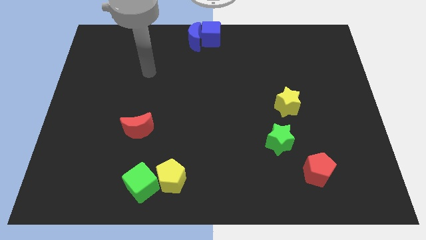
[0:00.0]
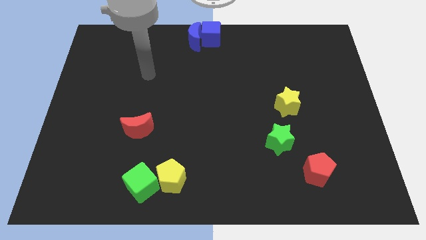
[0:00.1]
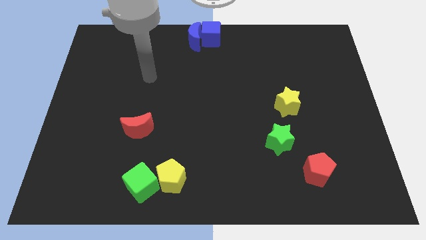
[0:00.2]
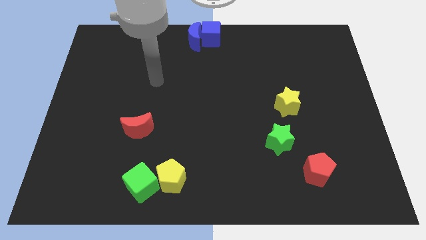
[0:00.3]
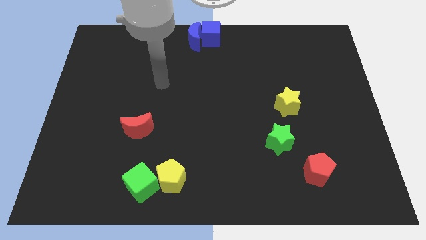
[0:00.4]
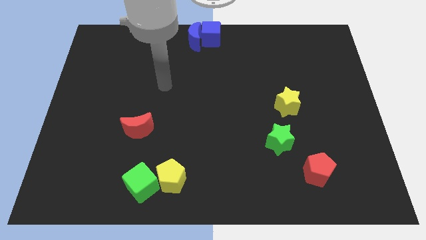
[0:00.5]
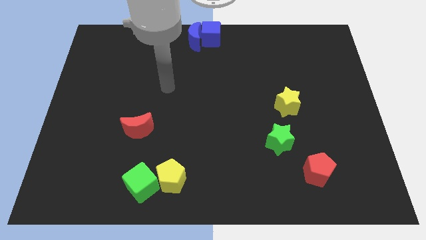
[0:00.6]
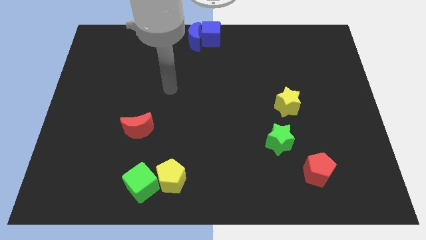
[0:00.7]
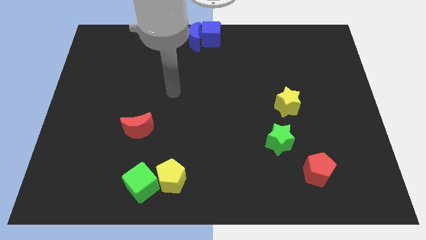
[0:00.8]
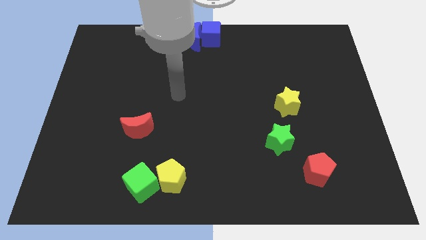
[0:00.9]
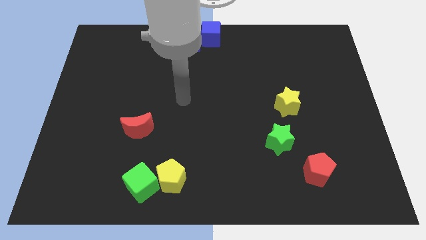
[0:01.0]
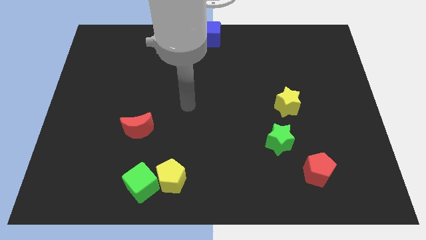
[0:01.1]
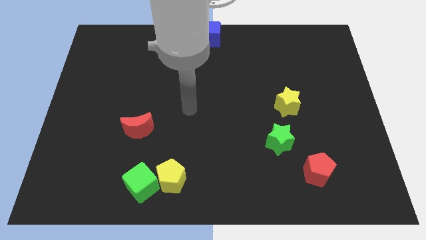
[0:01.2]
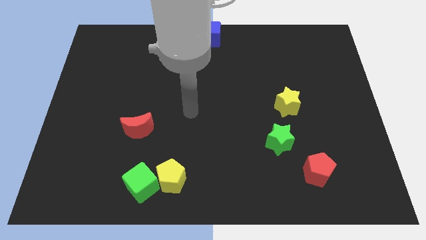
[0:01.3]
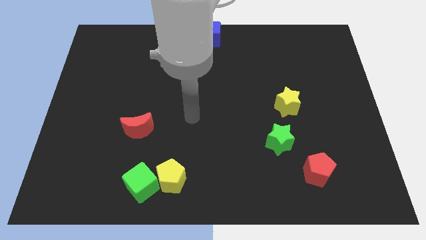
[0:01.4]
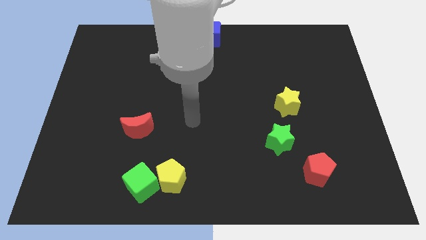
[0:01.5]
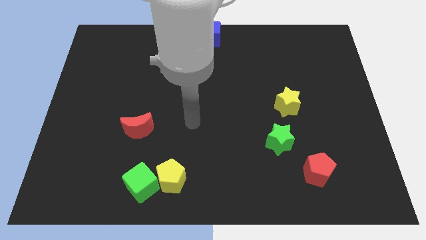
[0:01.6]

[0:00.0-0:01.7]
point your arm at the center of the board

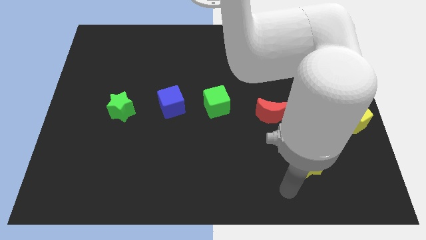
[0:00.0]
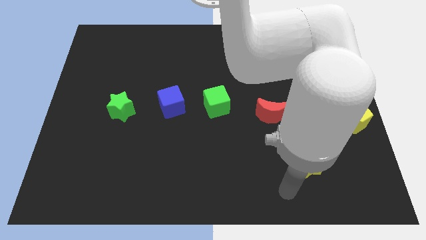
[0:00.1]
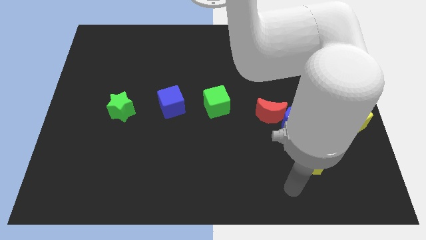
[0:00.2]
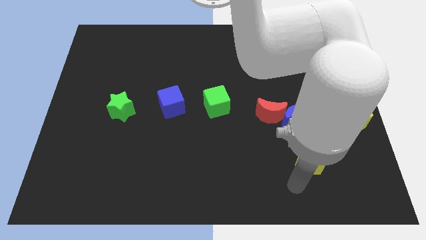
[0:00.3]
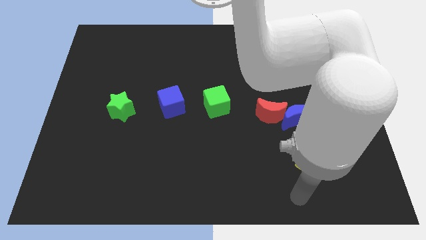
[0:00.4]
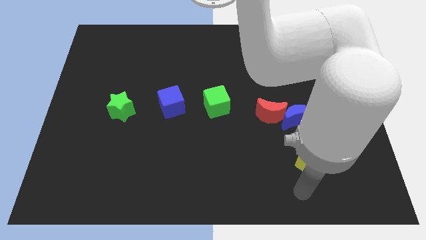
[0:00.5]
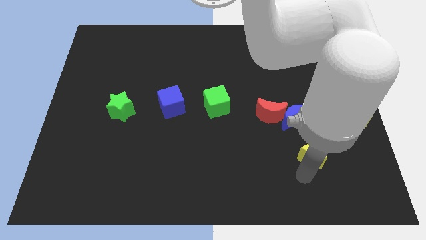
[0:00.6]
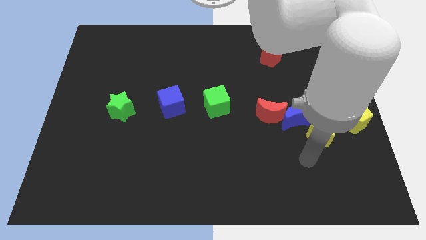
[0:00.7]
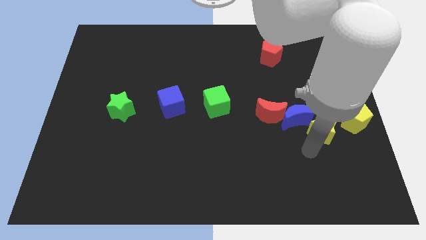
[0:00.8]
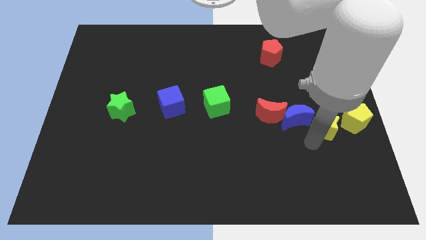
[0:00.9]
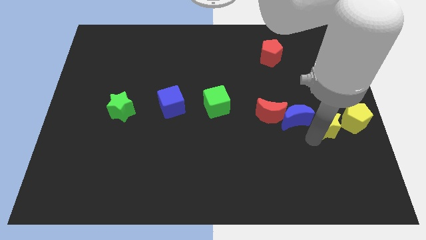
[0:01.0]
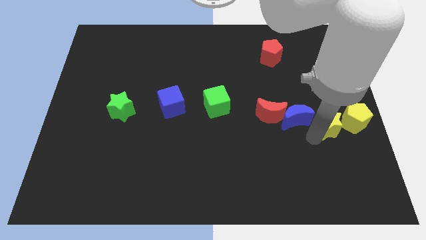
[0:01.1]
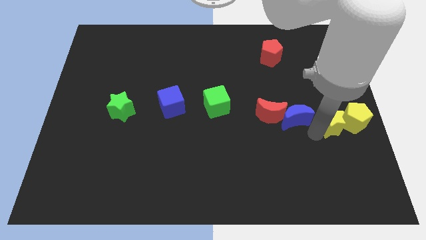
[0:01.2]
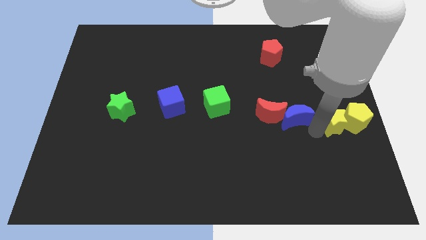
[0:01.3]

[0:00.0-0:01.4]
push the yellow star into the yellow pentagon

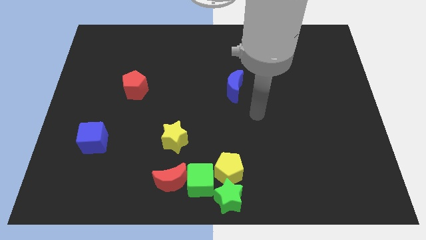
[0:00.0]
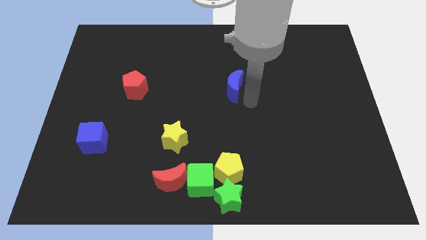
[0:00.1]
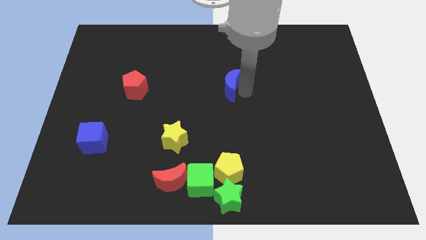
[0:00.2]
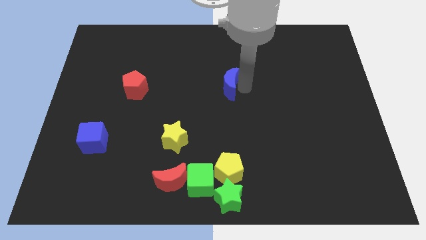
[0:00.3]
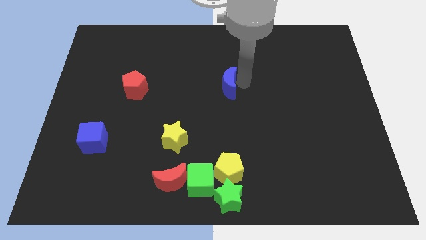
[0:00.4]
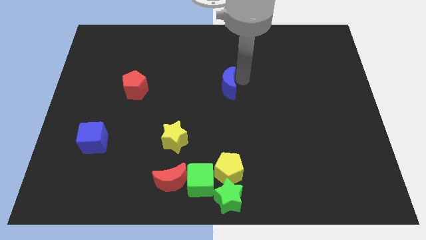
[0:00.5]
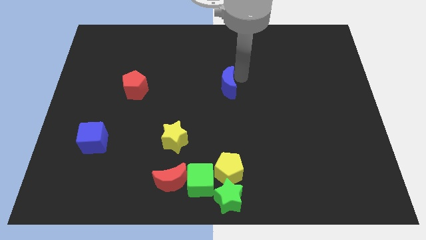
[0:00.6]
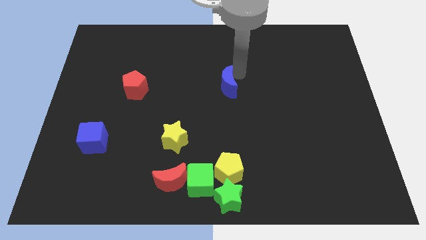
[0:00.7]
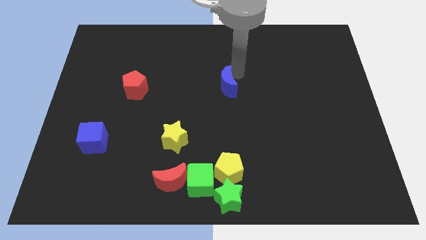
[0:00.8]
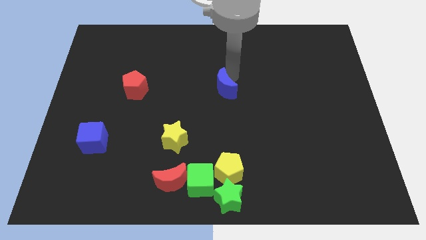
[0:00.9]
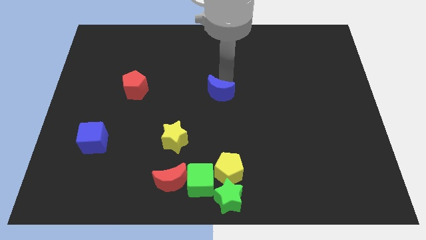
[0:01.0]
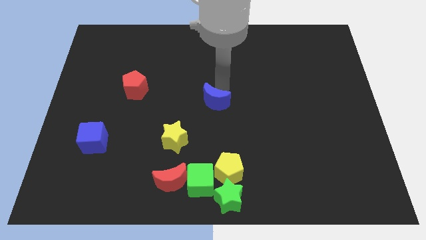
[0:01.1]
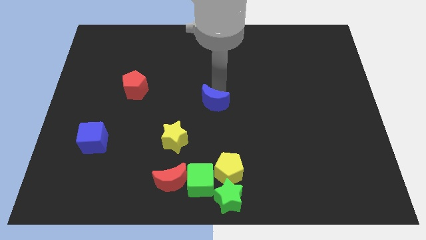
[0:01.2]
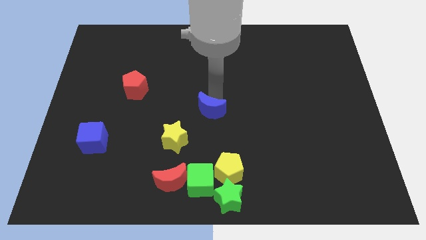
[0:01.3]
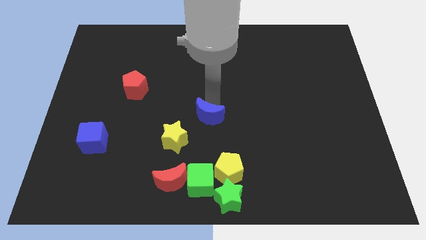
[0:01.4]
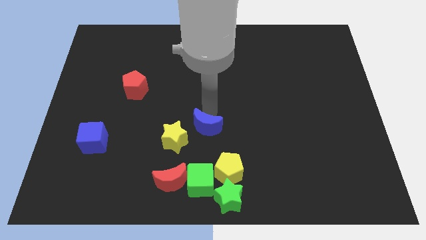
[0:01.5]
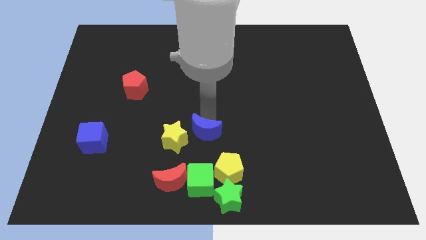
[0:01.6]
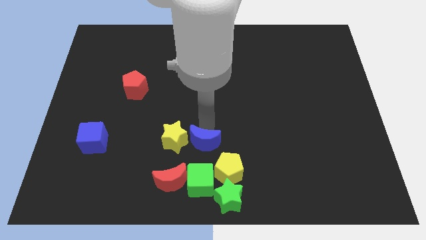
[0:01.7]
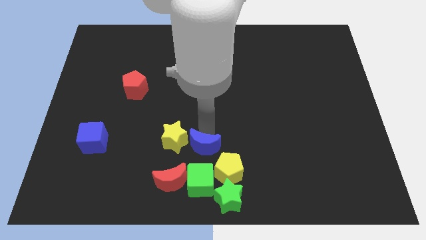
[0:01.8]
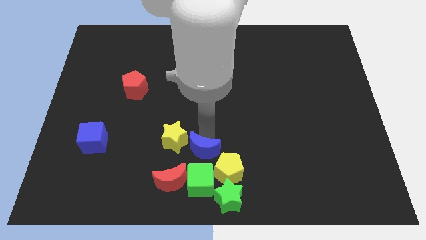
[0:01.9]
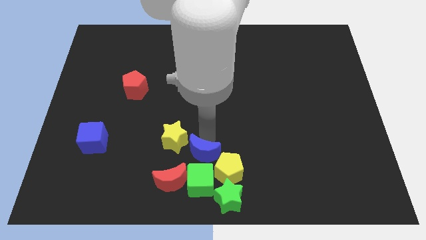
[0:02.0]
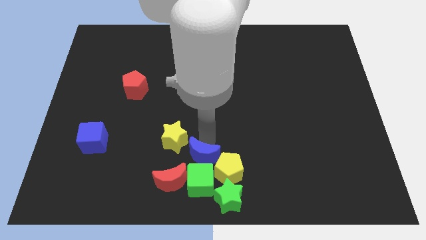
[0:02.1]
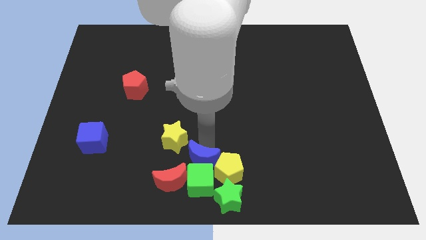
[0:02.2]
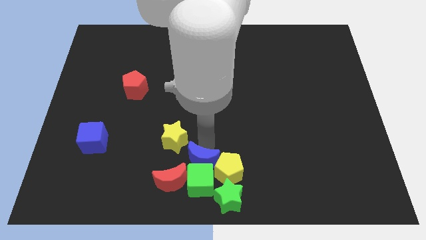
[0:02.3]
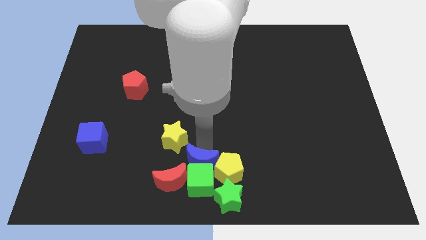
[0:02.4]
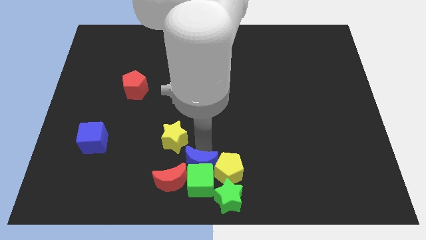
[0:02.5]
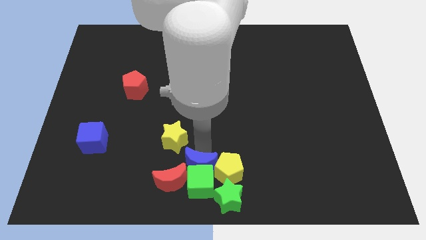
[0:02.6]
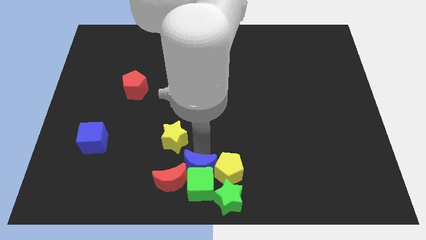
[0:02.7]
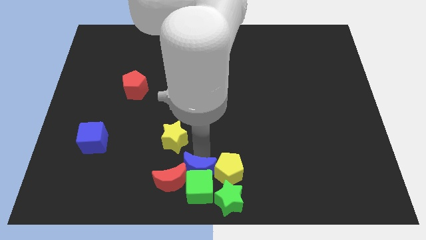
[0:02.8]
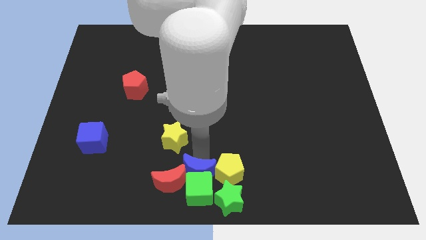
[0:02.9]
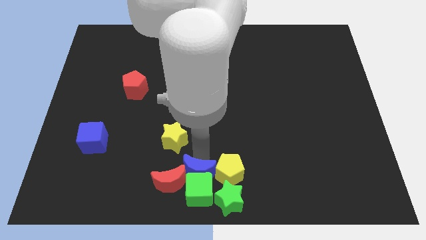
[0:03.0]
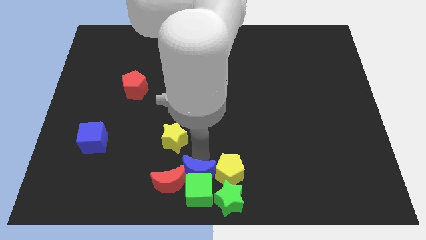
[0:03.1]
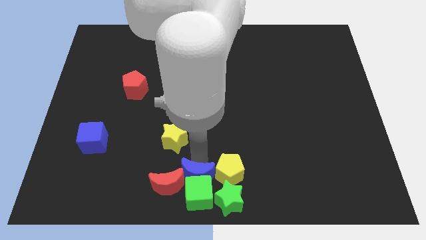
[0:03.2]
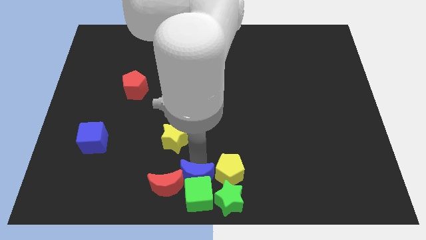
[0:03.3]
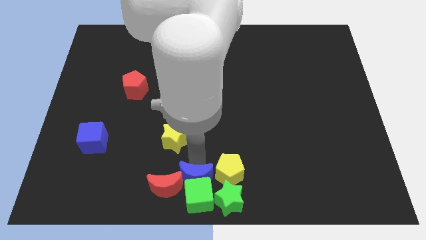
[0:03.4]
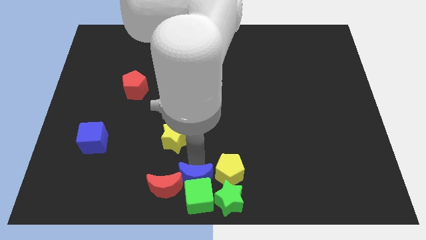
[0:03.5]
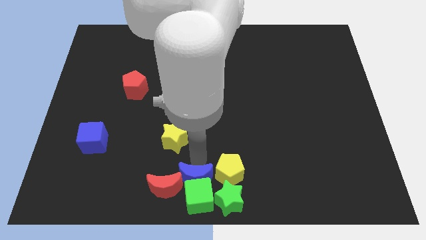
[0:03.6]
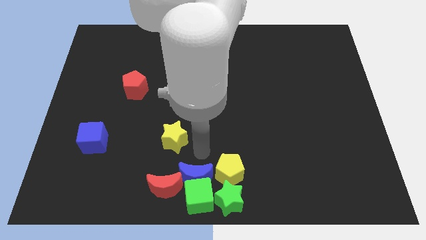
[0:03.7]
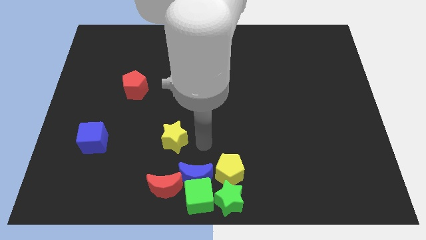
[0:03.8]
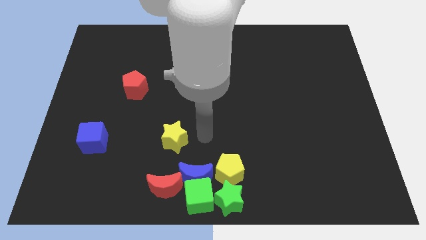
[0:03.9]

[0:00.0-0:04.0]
push the green cube with the blue crescent towards the bottom center of the board

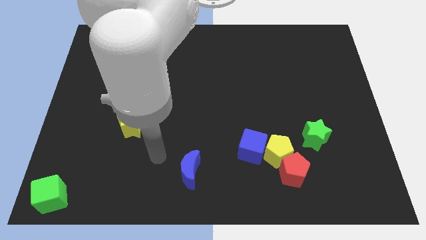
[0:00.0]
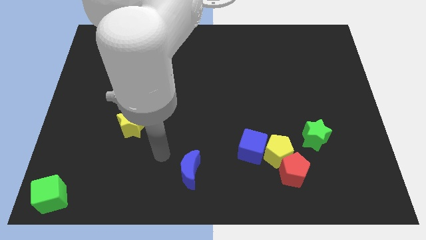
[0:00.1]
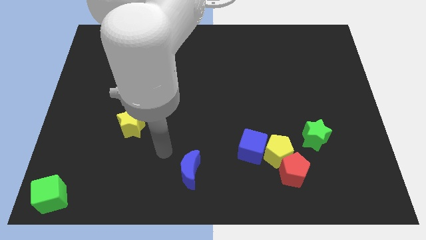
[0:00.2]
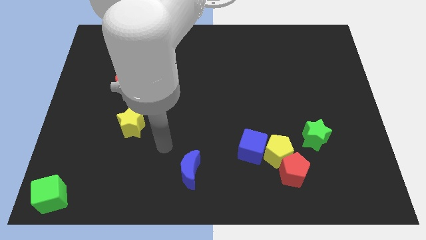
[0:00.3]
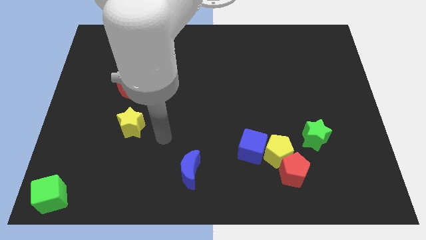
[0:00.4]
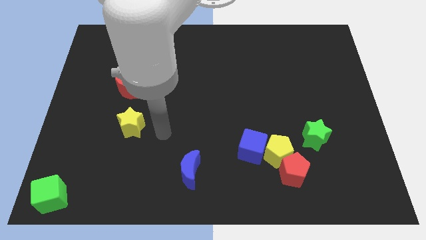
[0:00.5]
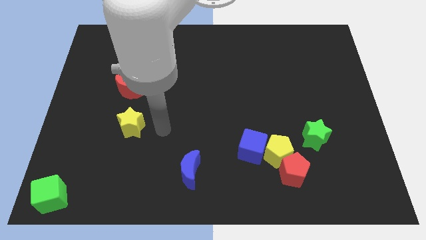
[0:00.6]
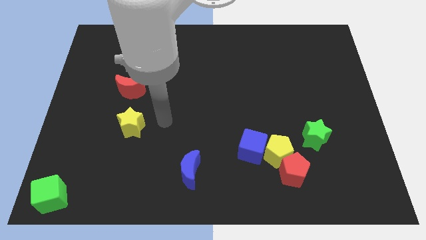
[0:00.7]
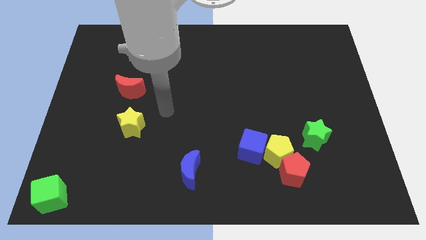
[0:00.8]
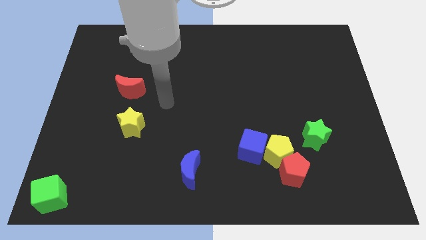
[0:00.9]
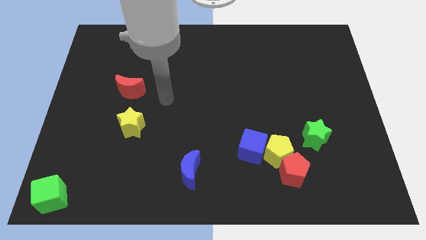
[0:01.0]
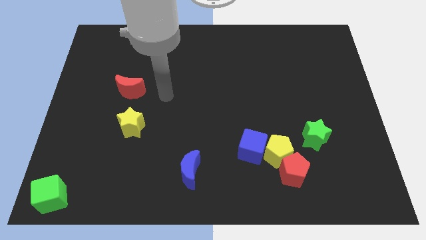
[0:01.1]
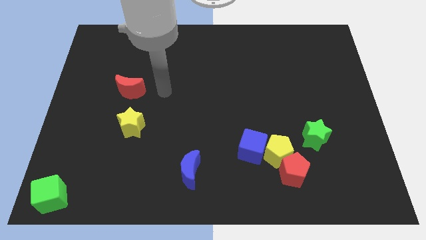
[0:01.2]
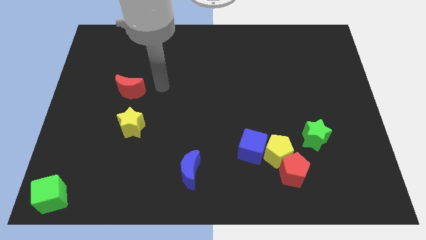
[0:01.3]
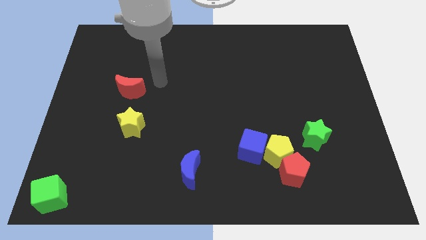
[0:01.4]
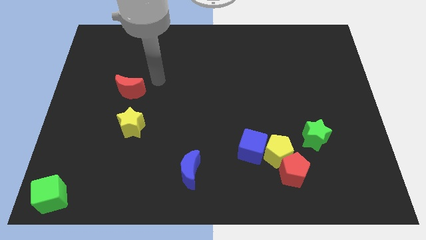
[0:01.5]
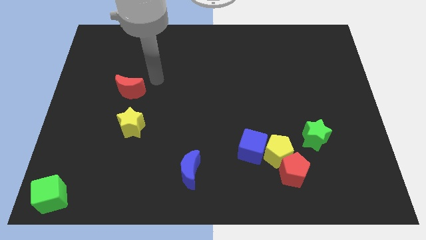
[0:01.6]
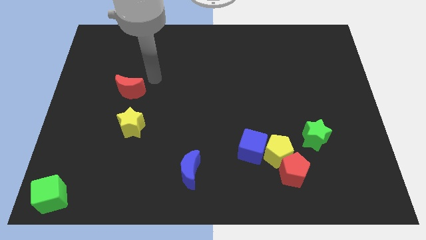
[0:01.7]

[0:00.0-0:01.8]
move the arm towards the red crescent
